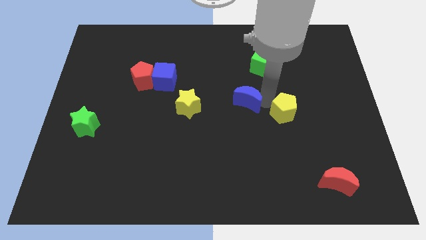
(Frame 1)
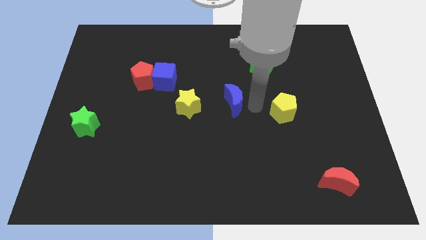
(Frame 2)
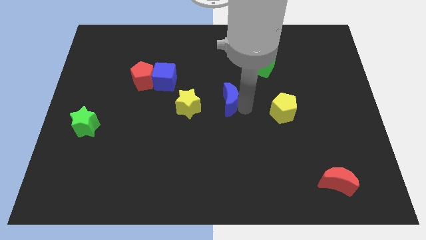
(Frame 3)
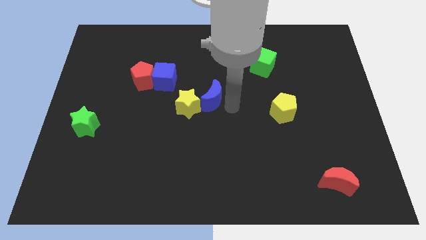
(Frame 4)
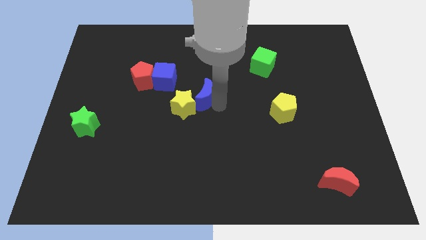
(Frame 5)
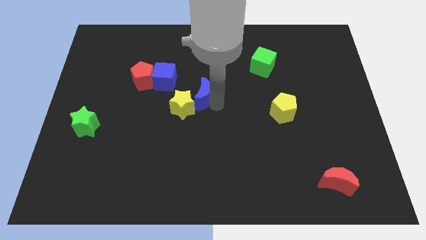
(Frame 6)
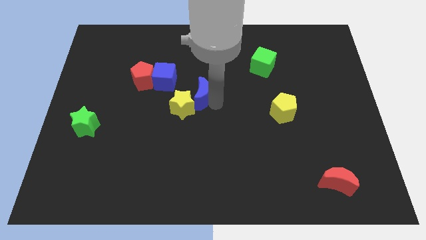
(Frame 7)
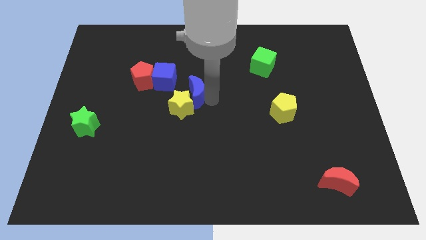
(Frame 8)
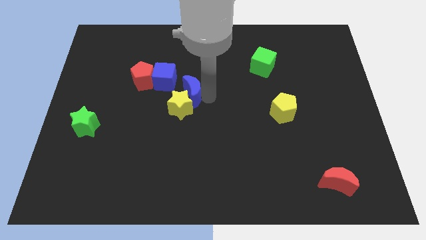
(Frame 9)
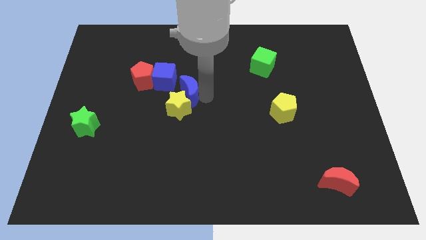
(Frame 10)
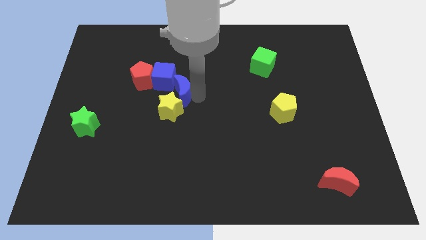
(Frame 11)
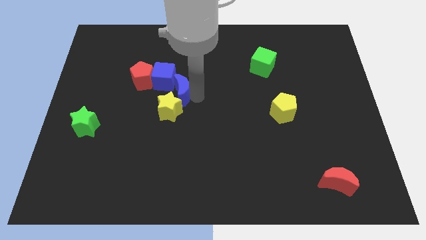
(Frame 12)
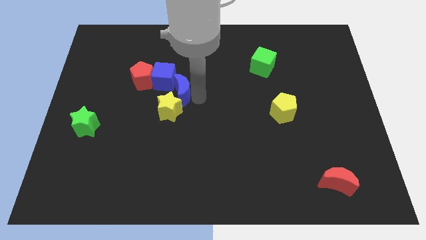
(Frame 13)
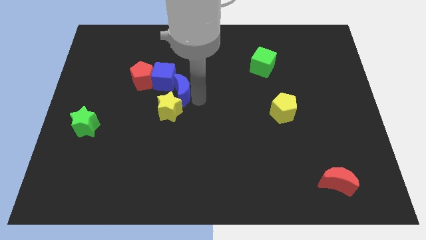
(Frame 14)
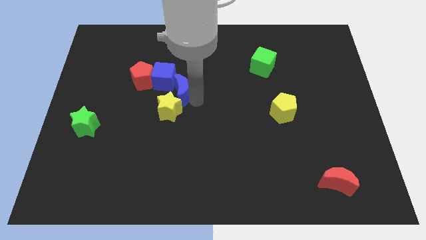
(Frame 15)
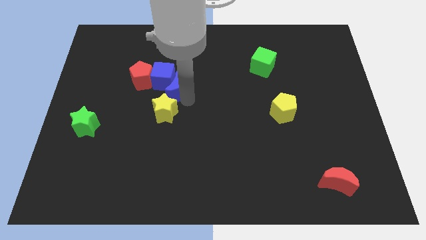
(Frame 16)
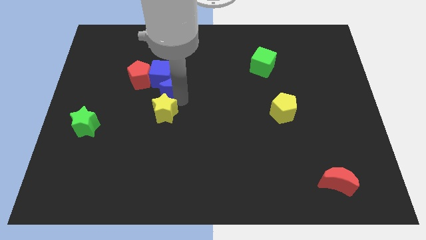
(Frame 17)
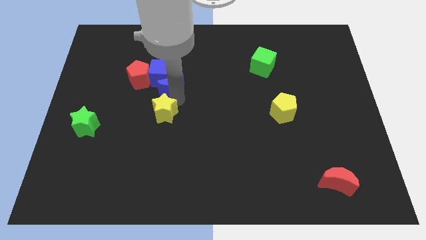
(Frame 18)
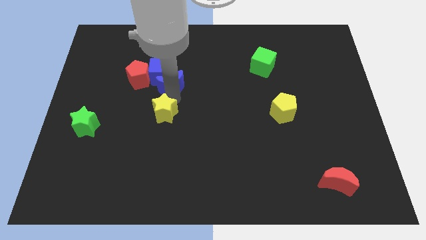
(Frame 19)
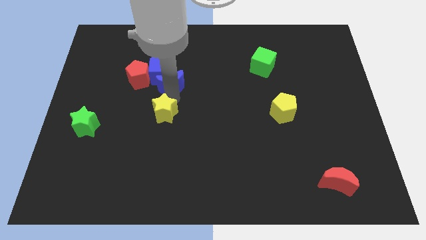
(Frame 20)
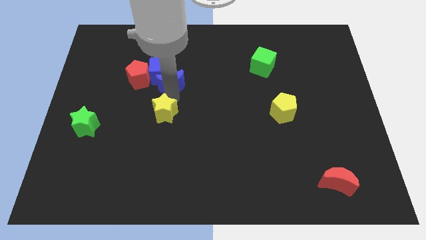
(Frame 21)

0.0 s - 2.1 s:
put the blue crescent to the top side of the yellow star

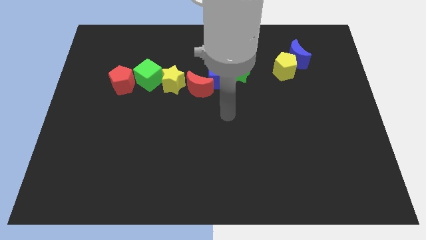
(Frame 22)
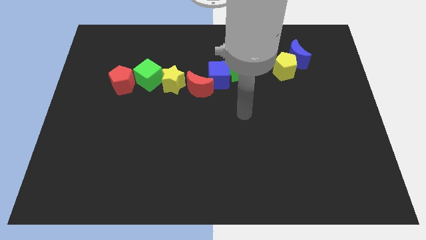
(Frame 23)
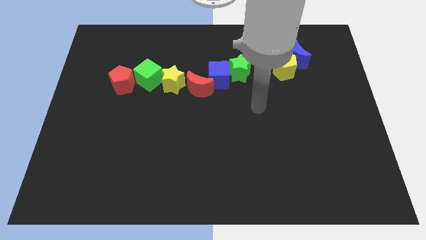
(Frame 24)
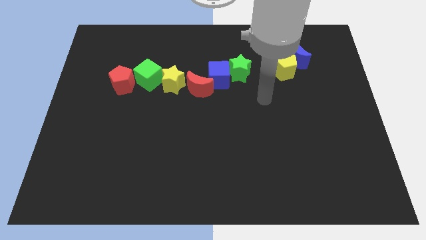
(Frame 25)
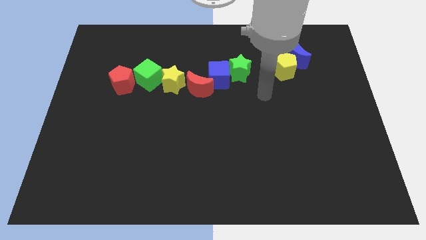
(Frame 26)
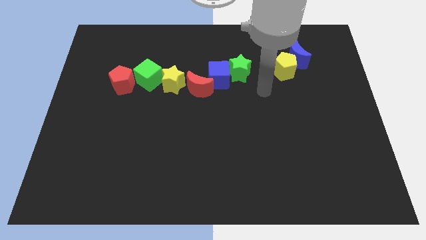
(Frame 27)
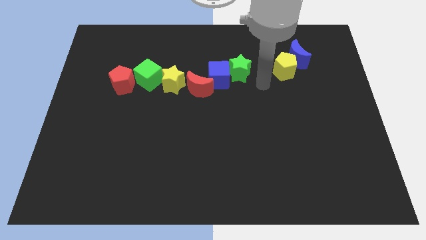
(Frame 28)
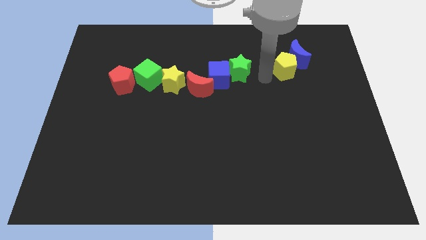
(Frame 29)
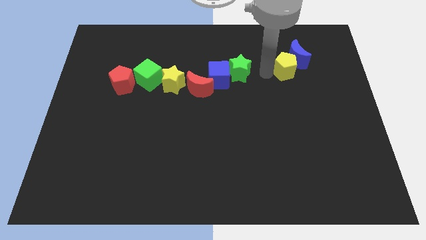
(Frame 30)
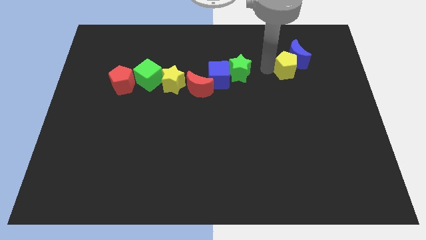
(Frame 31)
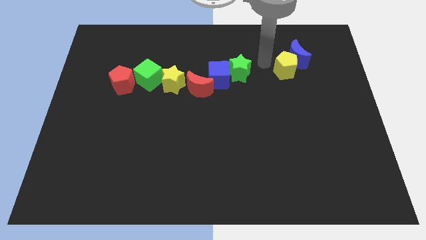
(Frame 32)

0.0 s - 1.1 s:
push the red moon in between the yellow star and the blue cube

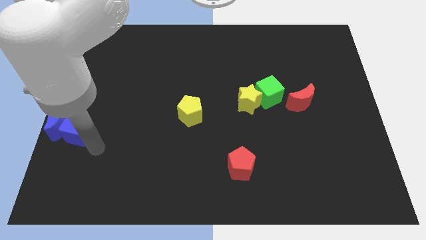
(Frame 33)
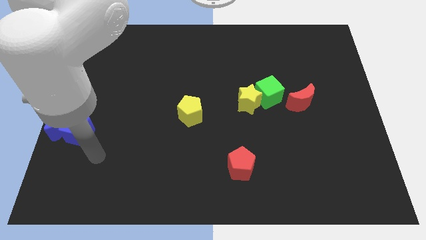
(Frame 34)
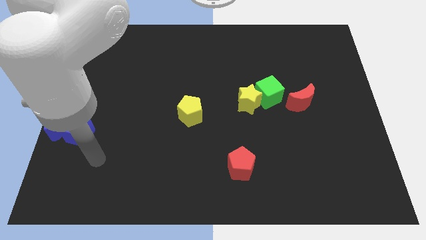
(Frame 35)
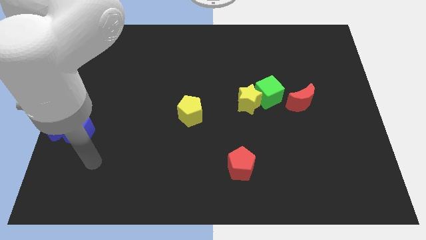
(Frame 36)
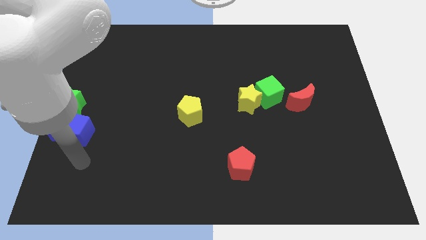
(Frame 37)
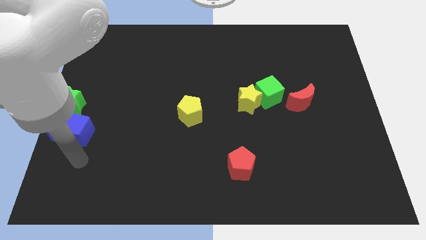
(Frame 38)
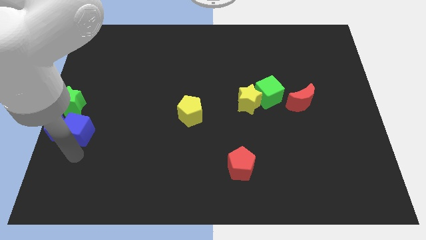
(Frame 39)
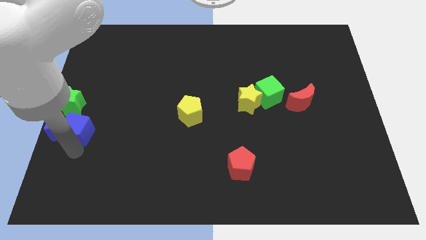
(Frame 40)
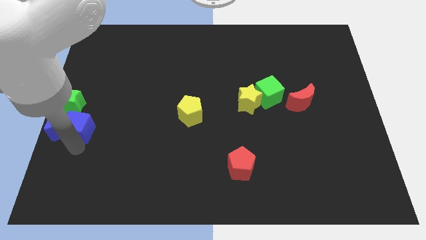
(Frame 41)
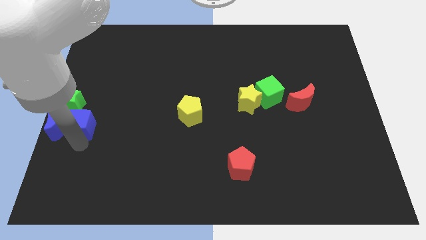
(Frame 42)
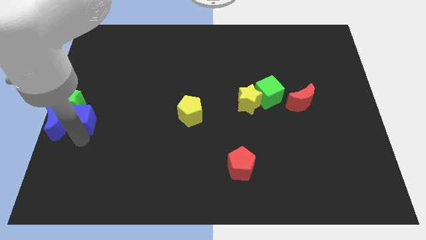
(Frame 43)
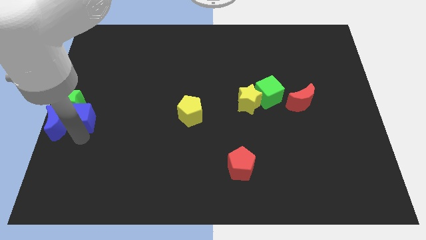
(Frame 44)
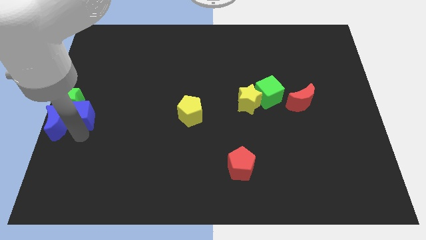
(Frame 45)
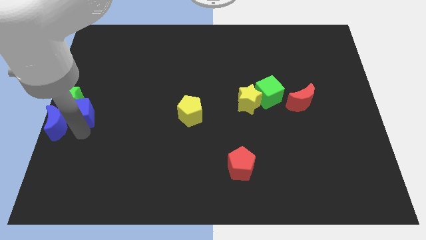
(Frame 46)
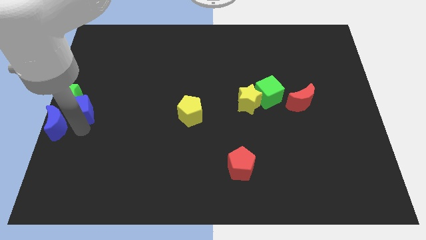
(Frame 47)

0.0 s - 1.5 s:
push the blue cube into the green star

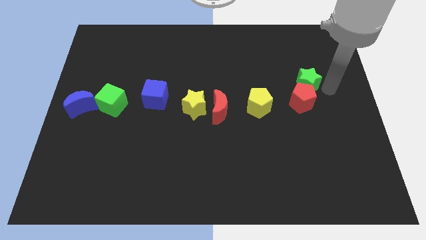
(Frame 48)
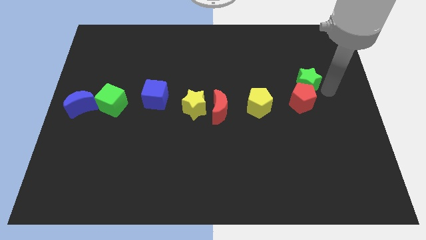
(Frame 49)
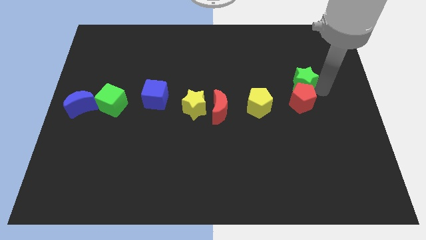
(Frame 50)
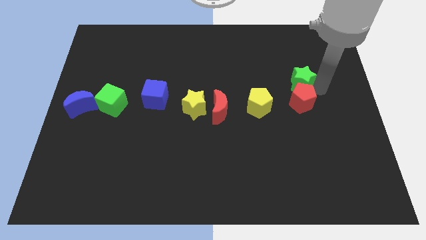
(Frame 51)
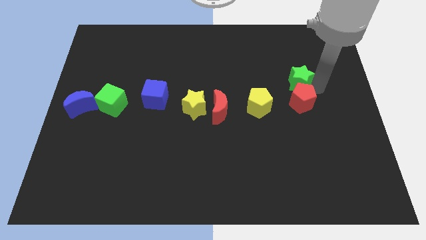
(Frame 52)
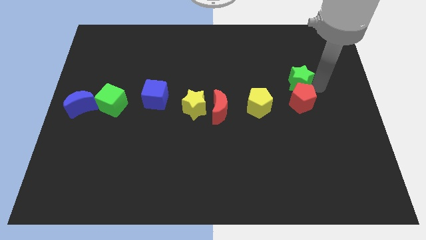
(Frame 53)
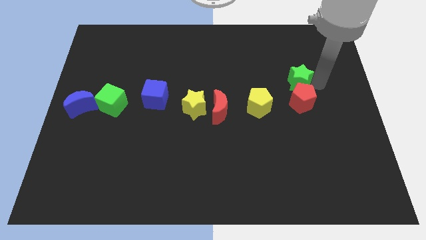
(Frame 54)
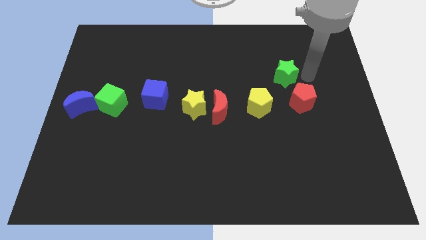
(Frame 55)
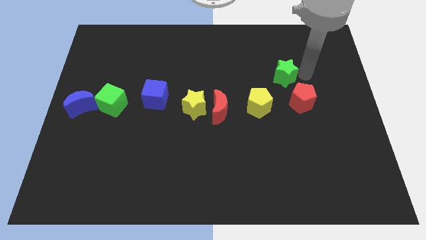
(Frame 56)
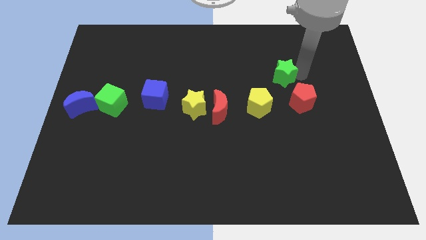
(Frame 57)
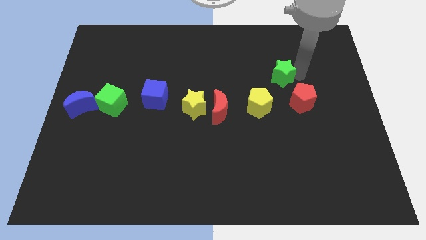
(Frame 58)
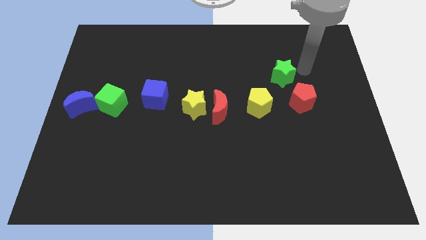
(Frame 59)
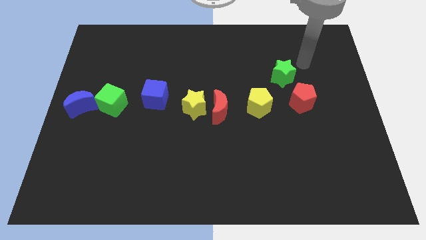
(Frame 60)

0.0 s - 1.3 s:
separate the green star from the red pentagon

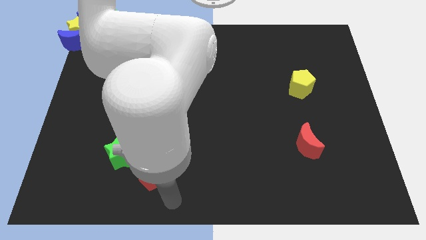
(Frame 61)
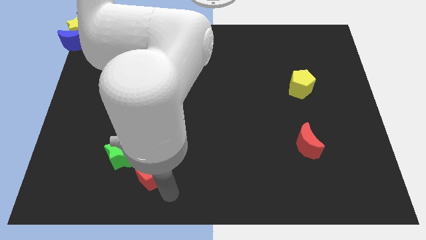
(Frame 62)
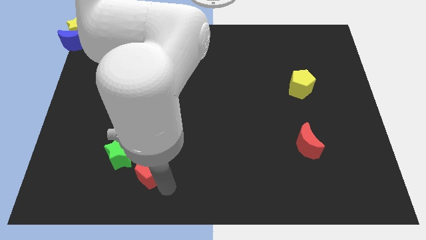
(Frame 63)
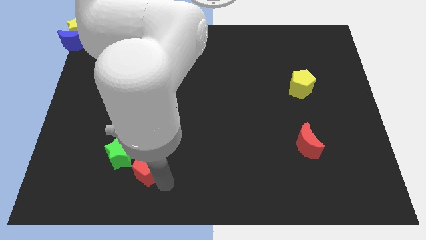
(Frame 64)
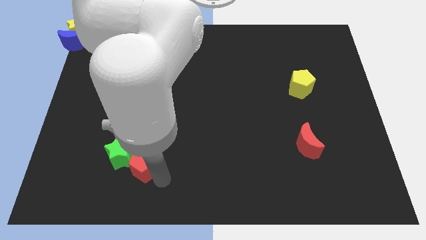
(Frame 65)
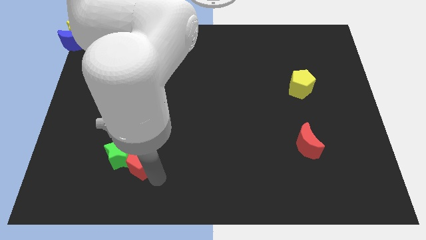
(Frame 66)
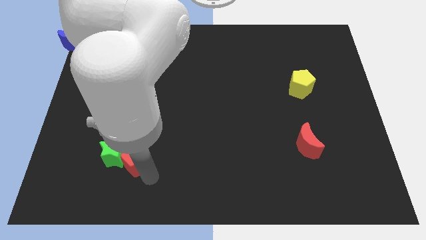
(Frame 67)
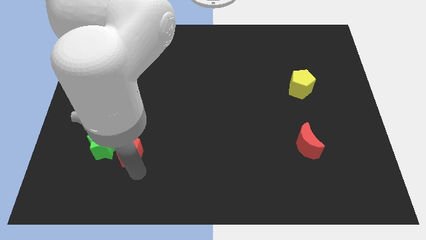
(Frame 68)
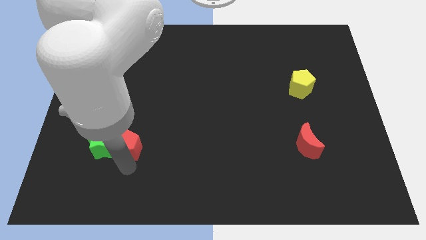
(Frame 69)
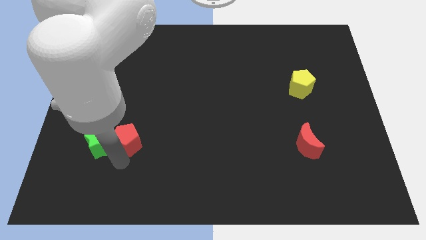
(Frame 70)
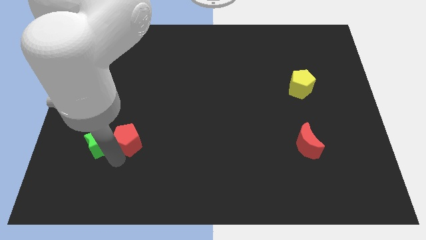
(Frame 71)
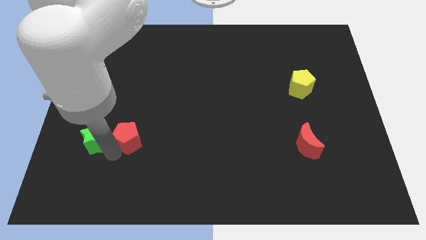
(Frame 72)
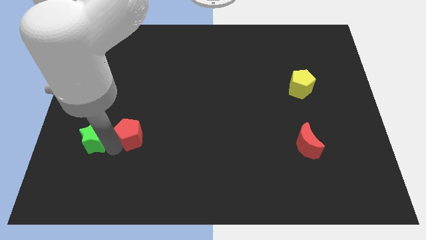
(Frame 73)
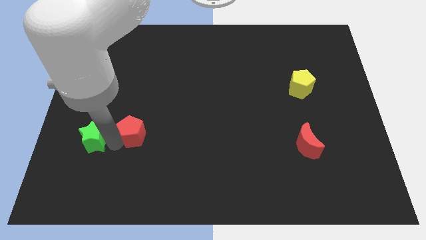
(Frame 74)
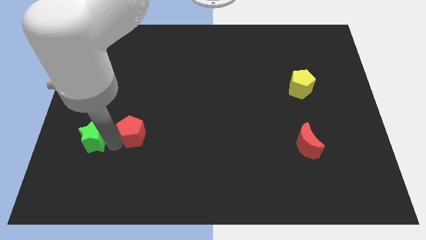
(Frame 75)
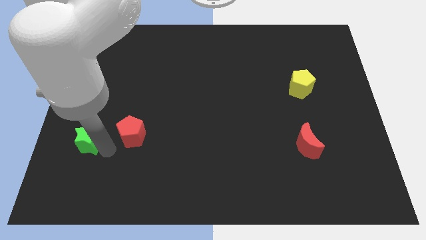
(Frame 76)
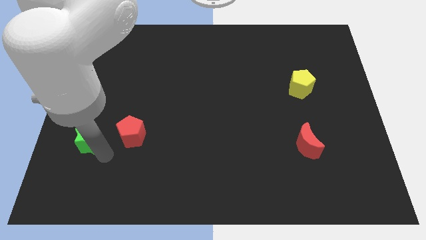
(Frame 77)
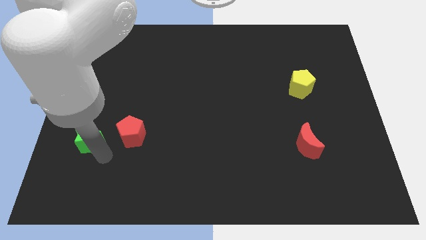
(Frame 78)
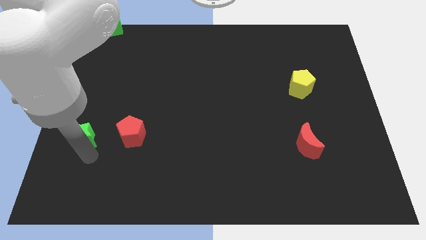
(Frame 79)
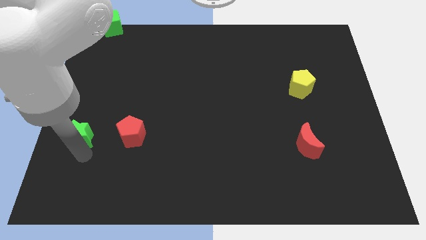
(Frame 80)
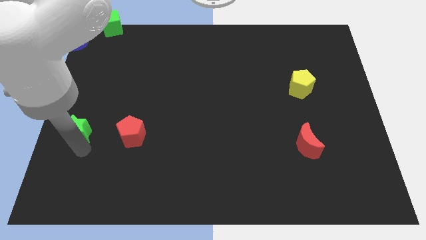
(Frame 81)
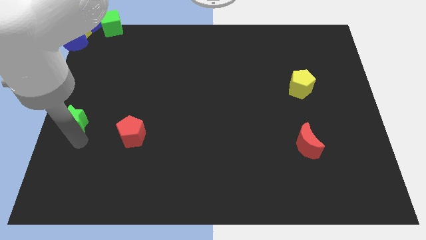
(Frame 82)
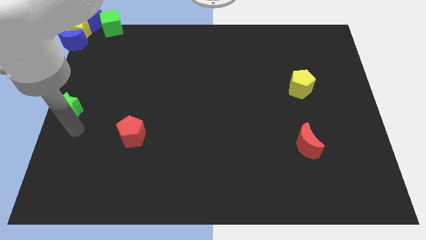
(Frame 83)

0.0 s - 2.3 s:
separate the red pentagon and green star

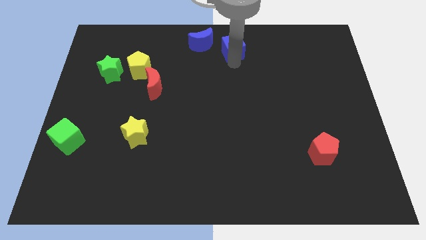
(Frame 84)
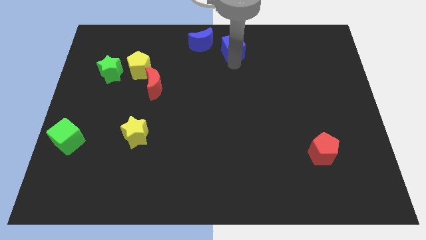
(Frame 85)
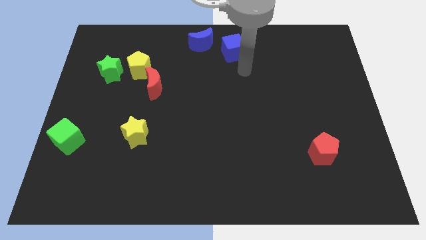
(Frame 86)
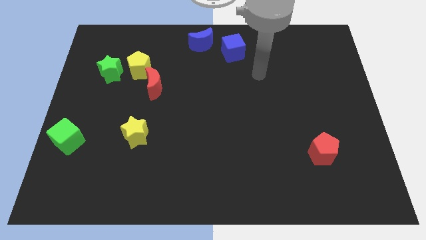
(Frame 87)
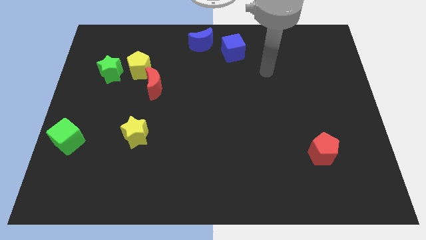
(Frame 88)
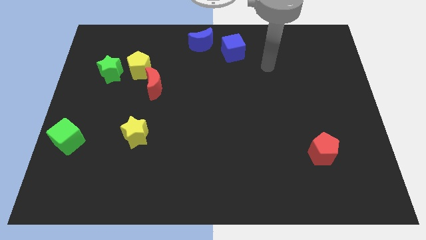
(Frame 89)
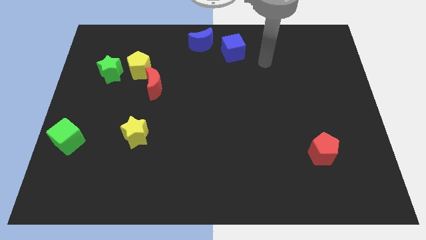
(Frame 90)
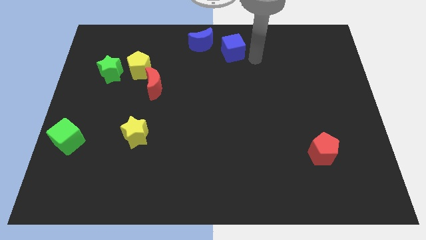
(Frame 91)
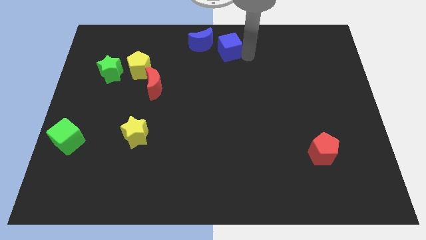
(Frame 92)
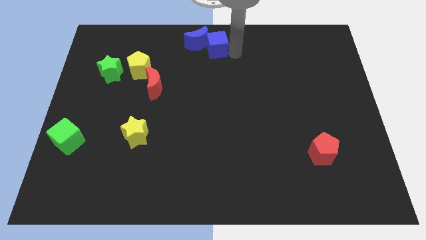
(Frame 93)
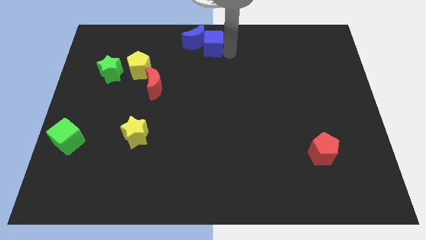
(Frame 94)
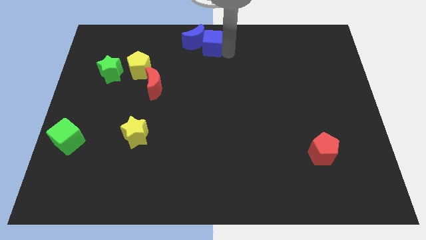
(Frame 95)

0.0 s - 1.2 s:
push the blue cube into the blue moon
